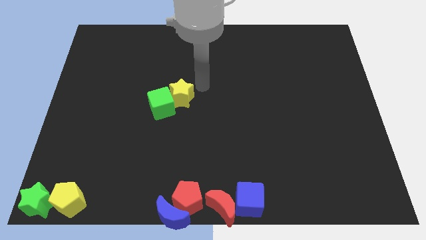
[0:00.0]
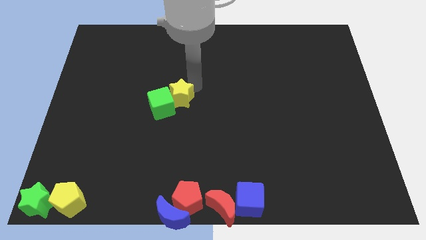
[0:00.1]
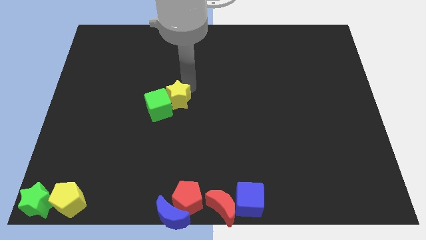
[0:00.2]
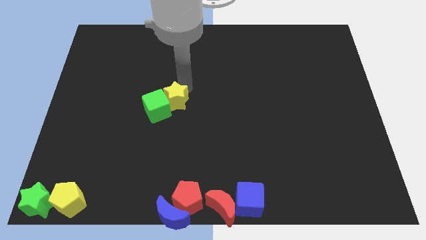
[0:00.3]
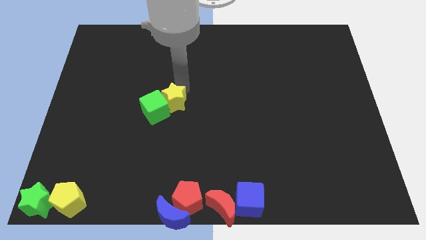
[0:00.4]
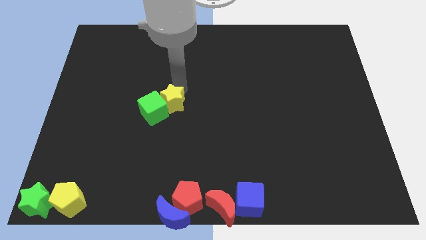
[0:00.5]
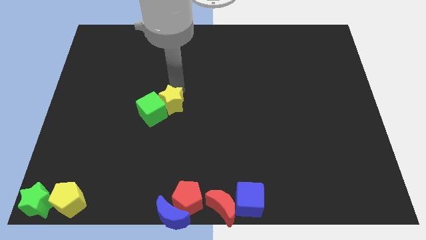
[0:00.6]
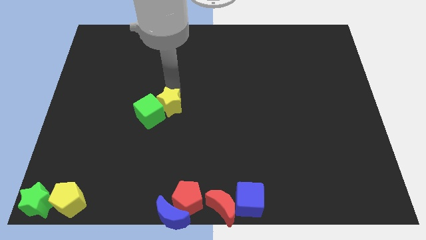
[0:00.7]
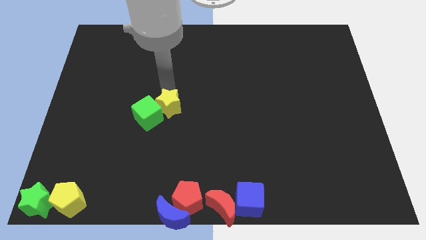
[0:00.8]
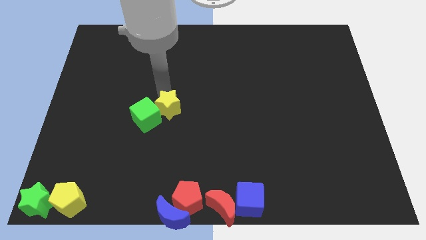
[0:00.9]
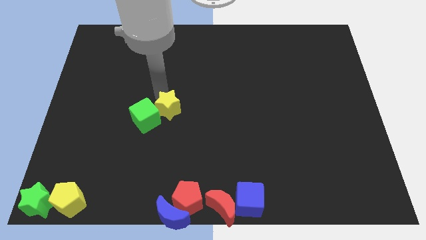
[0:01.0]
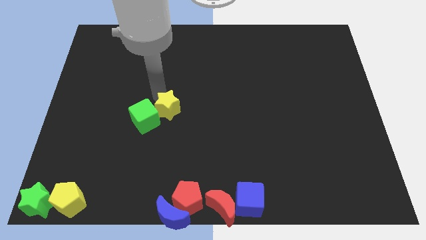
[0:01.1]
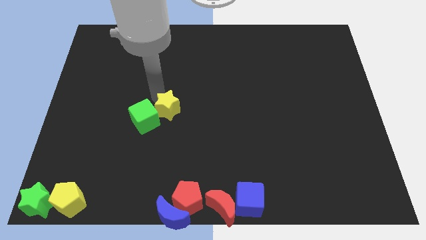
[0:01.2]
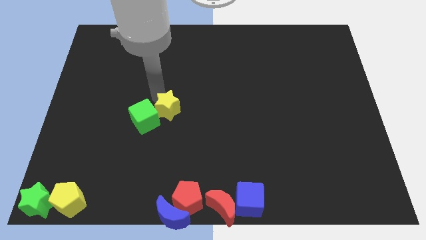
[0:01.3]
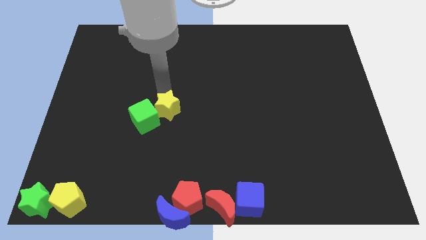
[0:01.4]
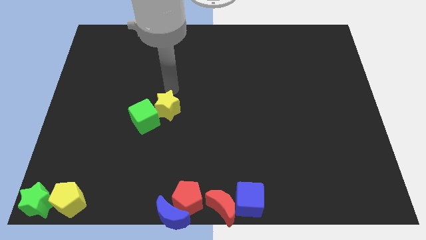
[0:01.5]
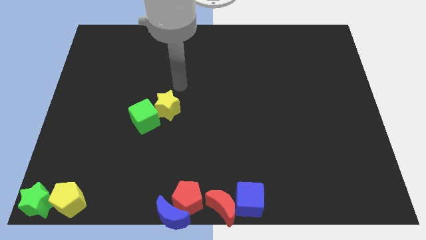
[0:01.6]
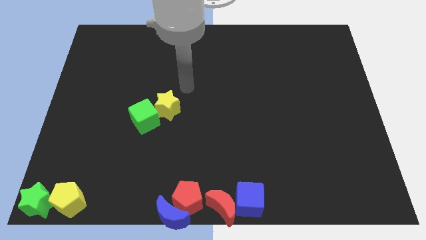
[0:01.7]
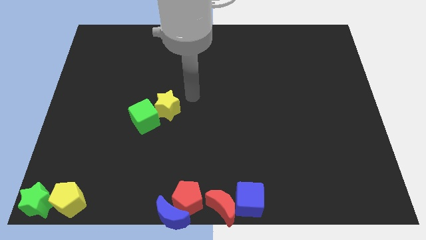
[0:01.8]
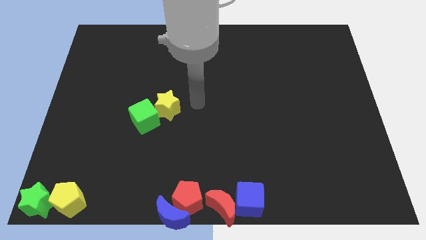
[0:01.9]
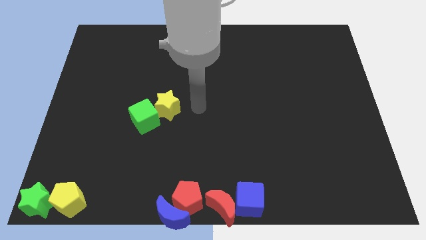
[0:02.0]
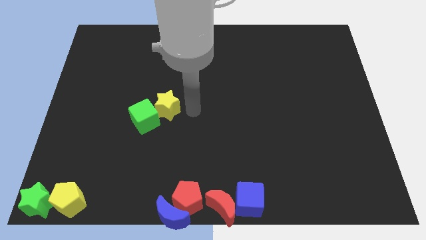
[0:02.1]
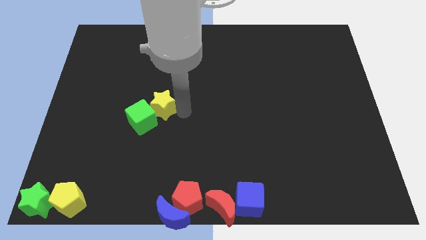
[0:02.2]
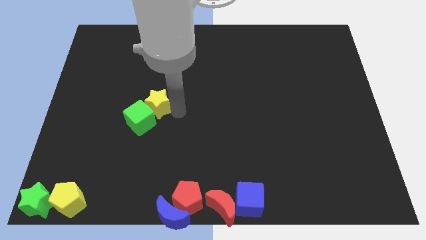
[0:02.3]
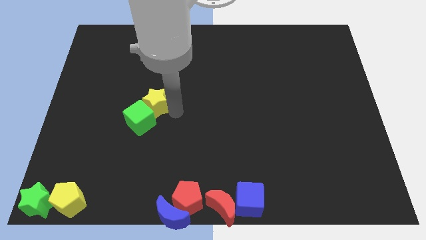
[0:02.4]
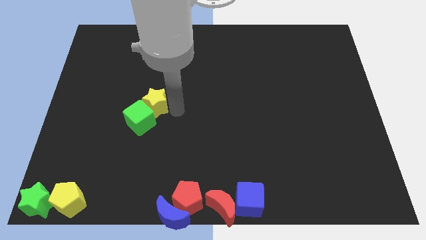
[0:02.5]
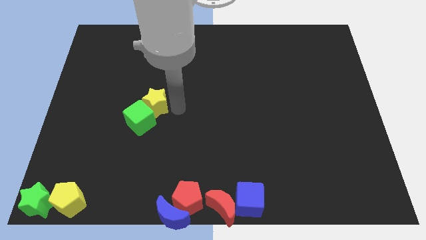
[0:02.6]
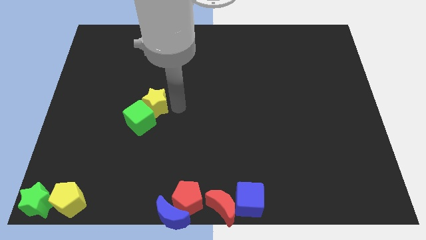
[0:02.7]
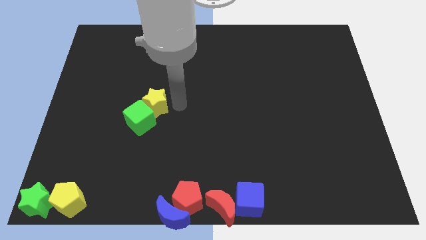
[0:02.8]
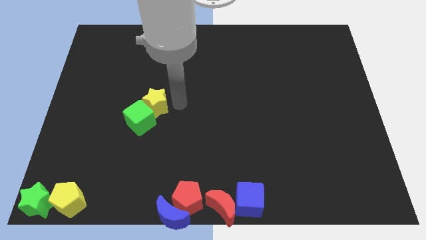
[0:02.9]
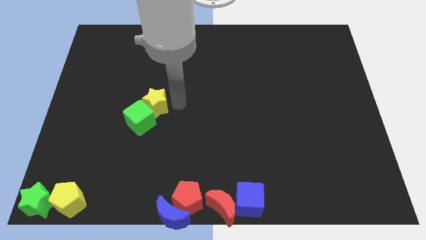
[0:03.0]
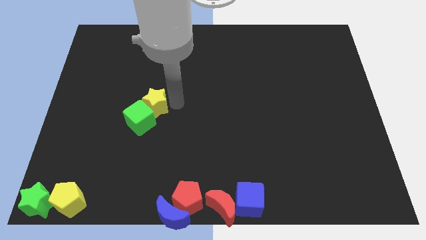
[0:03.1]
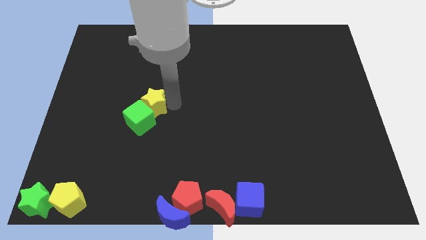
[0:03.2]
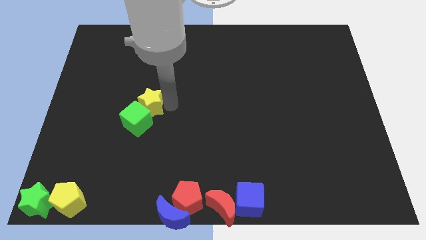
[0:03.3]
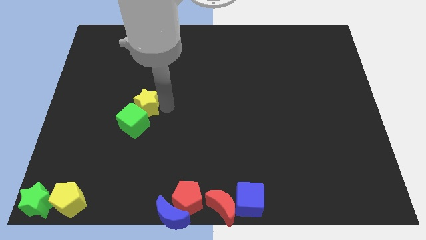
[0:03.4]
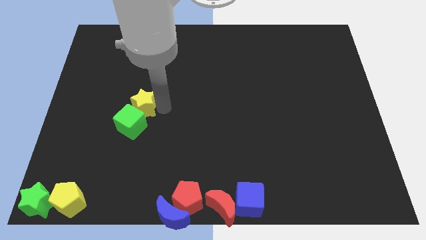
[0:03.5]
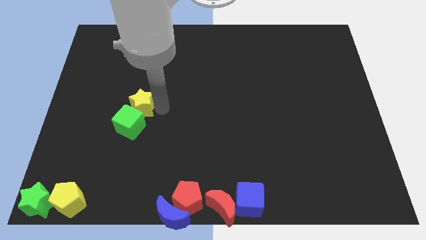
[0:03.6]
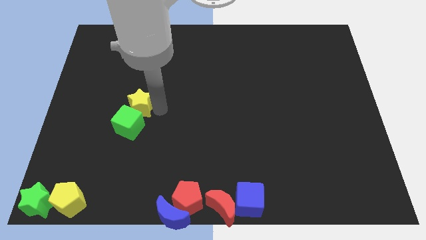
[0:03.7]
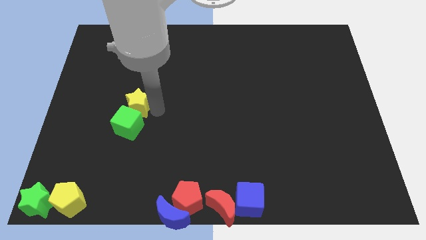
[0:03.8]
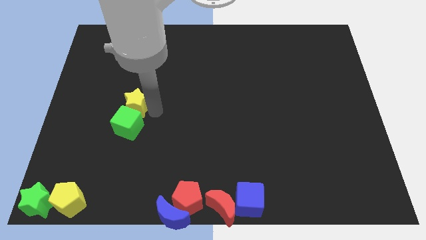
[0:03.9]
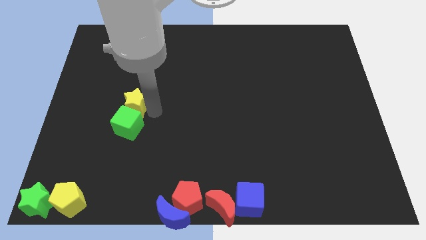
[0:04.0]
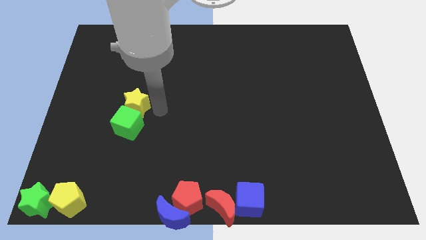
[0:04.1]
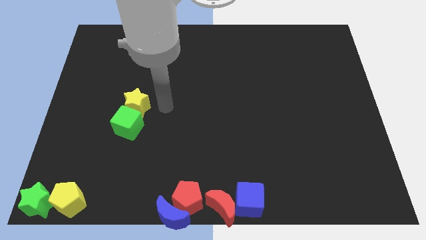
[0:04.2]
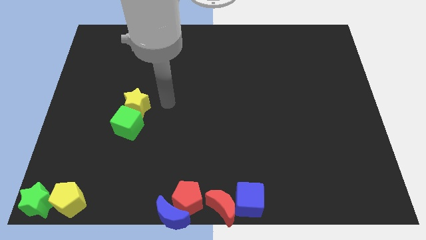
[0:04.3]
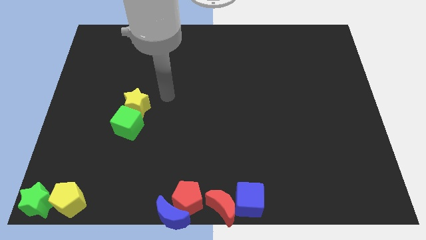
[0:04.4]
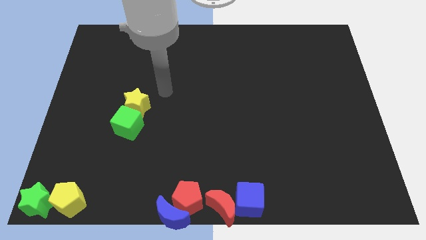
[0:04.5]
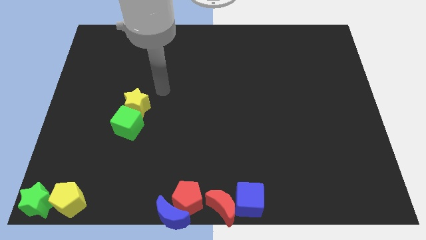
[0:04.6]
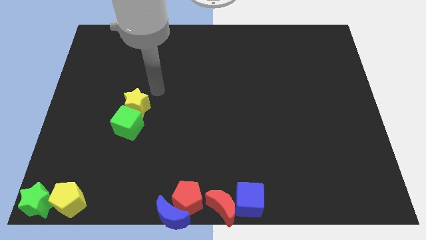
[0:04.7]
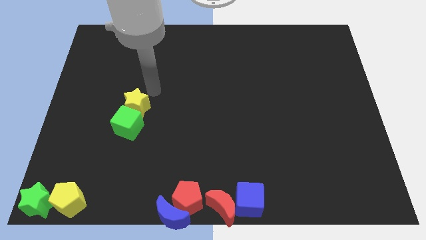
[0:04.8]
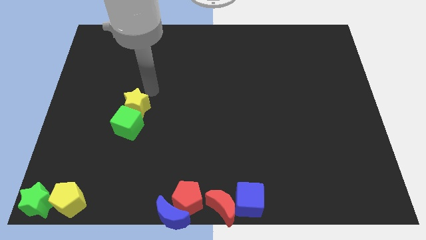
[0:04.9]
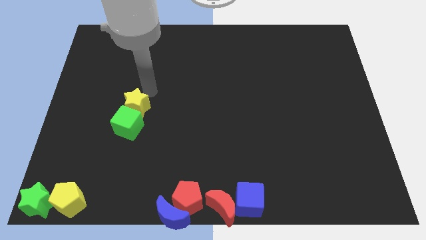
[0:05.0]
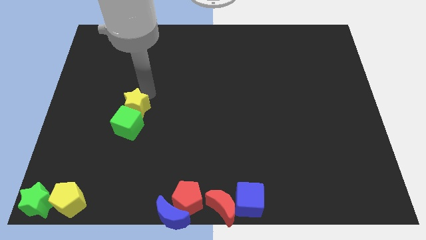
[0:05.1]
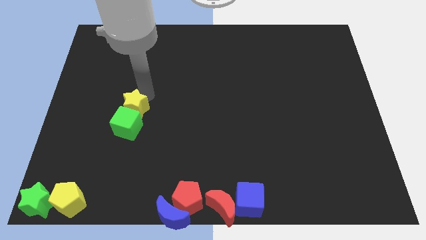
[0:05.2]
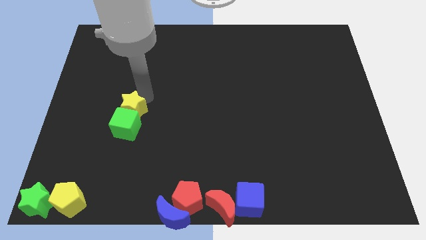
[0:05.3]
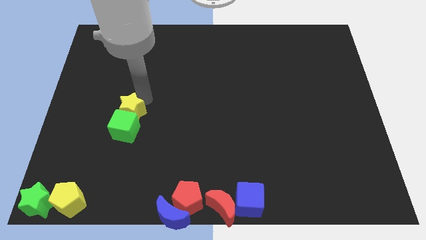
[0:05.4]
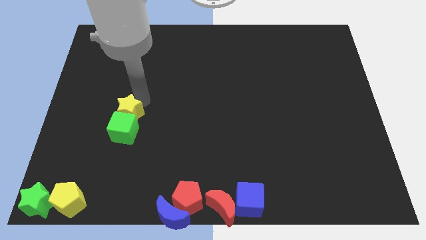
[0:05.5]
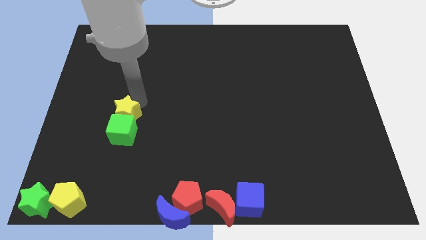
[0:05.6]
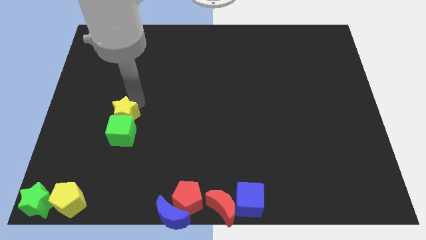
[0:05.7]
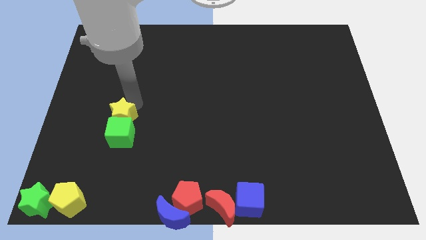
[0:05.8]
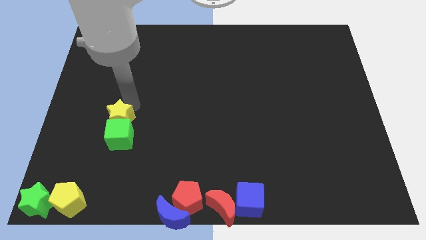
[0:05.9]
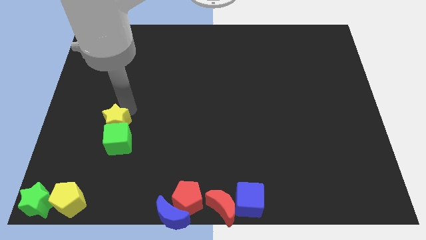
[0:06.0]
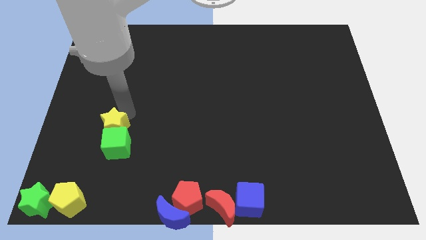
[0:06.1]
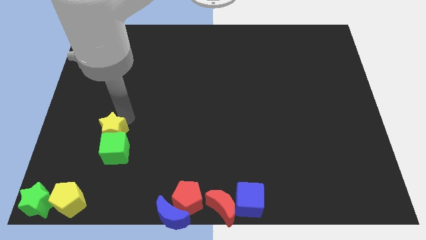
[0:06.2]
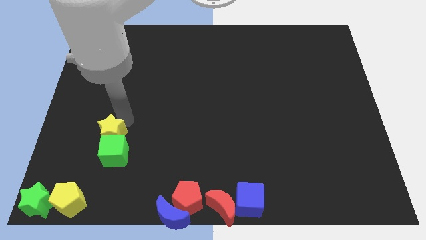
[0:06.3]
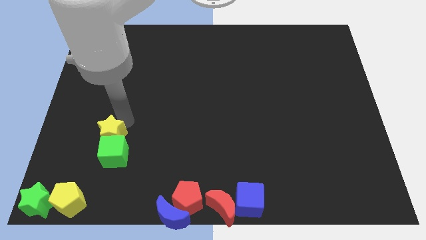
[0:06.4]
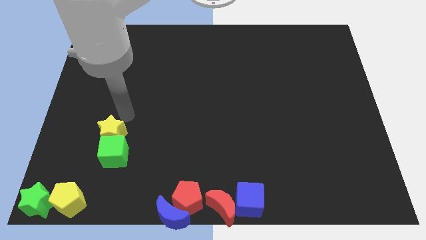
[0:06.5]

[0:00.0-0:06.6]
push the yellow star and green cube towards the group of blocks at the bottom left of the table

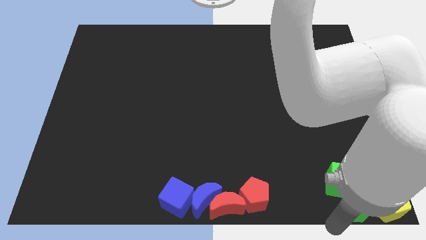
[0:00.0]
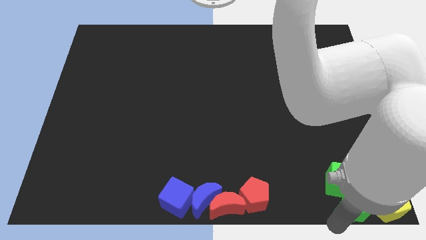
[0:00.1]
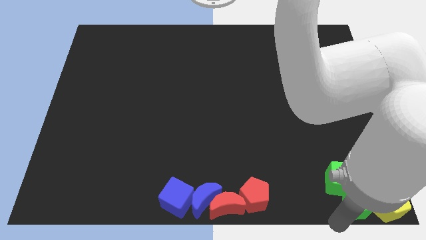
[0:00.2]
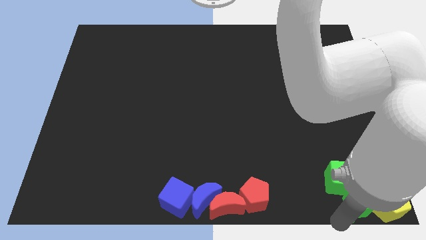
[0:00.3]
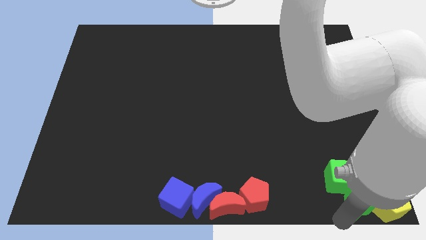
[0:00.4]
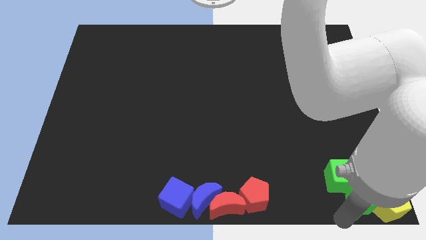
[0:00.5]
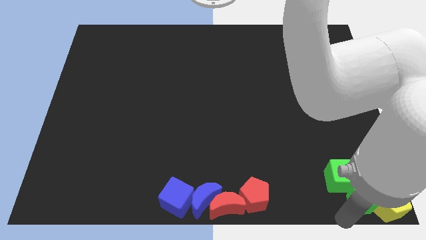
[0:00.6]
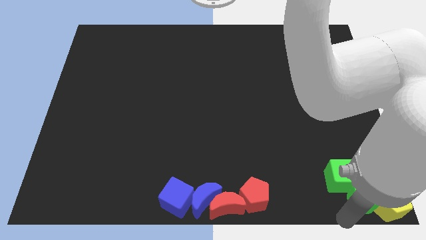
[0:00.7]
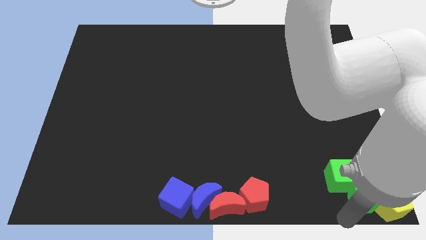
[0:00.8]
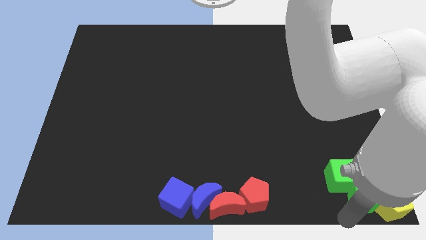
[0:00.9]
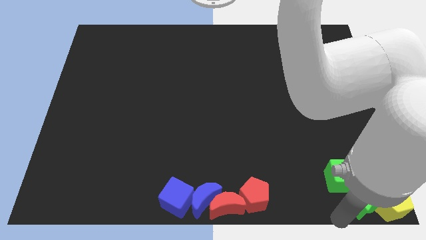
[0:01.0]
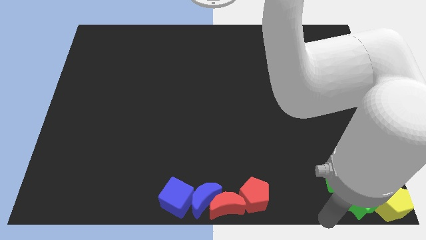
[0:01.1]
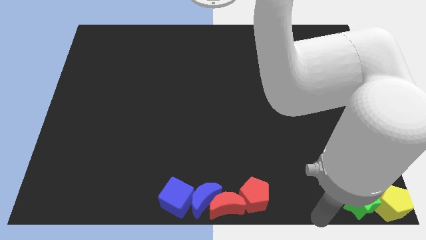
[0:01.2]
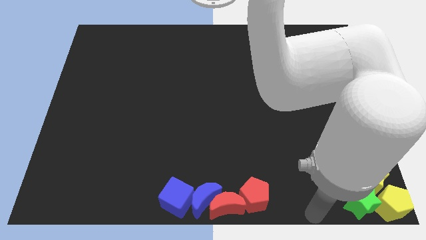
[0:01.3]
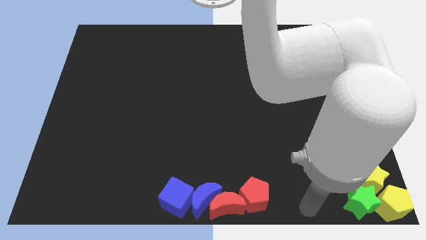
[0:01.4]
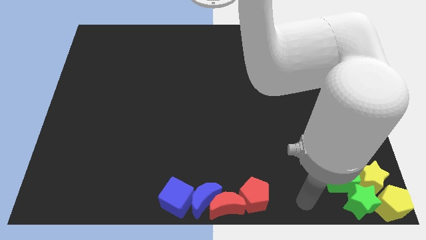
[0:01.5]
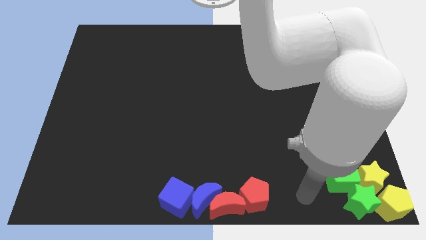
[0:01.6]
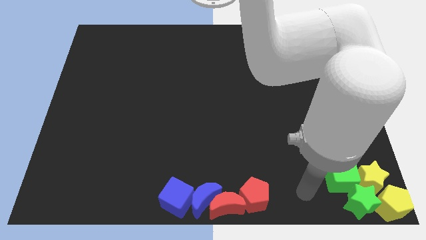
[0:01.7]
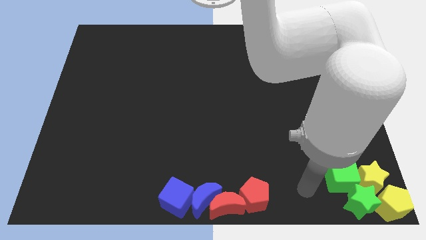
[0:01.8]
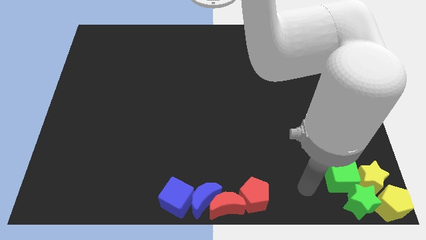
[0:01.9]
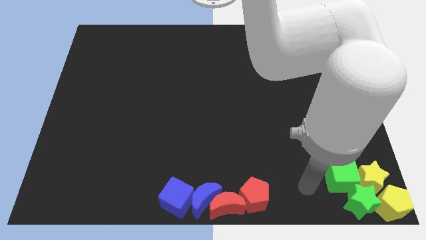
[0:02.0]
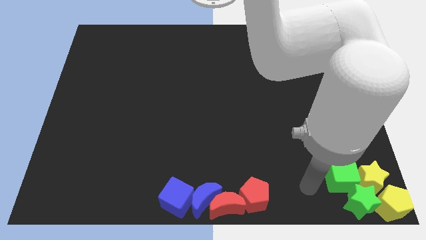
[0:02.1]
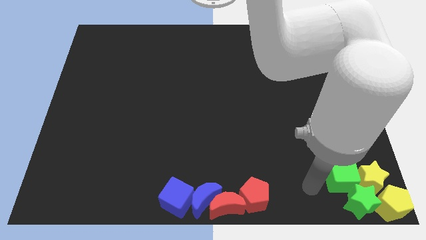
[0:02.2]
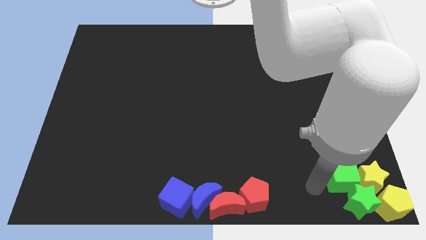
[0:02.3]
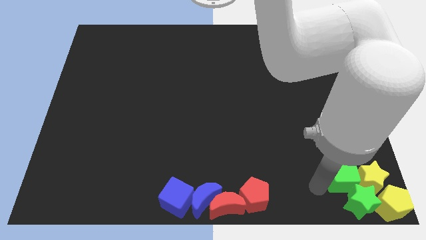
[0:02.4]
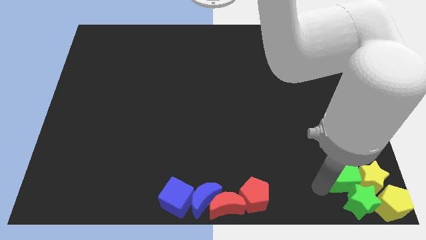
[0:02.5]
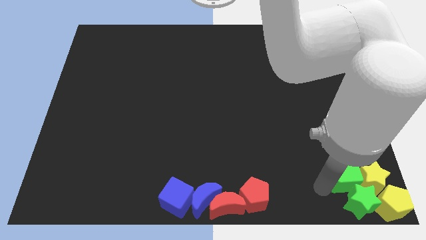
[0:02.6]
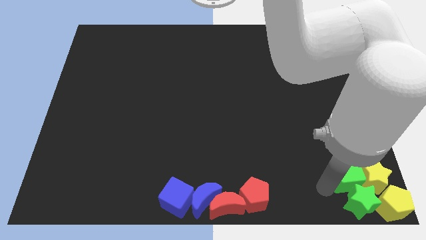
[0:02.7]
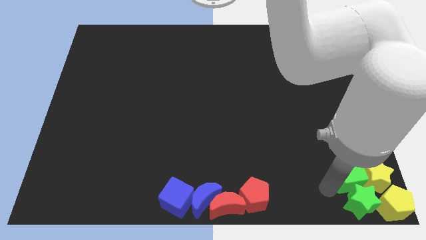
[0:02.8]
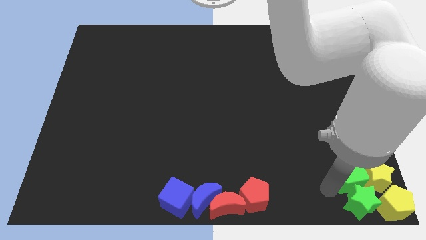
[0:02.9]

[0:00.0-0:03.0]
push the green cube towards the bottom of the board
